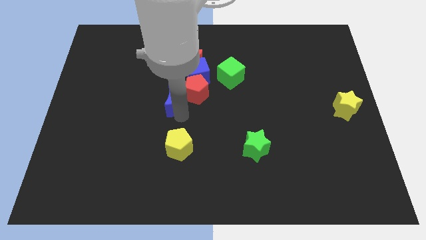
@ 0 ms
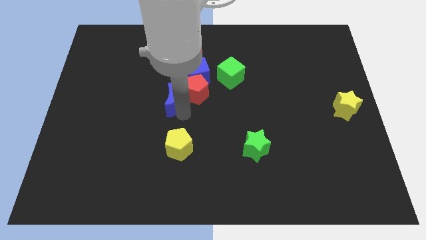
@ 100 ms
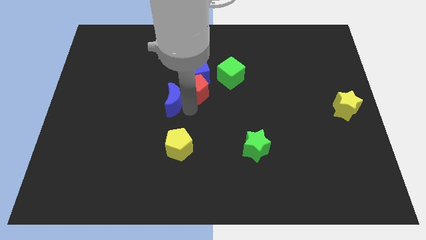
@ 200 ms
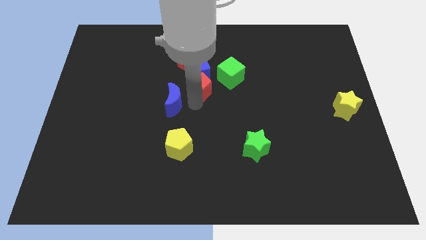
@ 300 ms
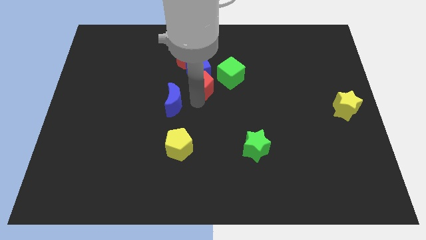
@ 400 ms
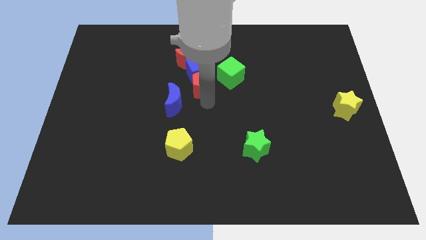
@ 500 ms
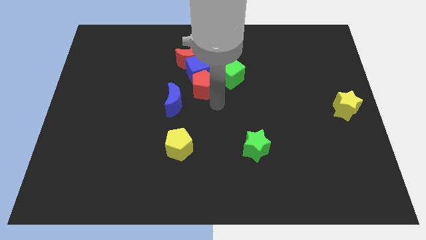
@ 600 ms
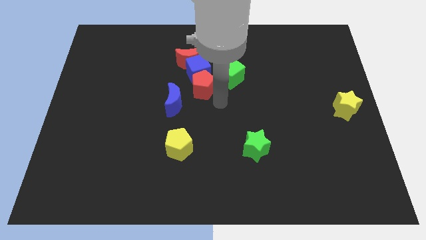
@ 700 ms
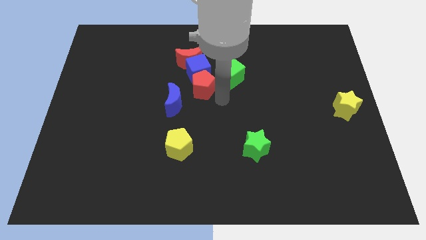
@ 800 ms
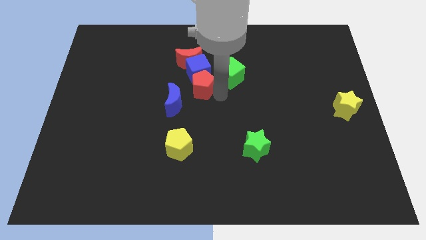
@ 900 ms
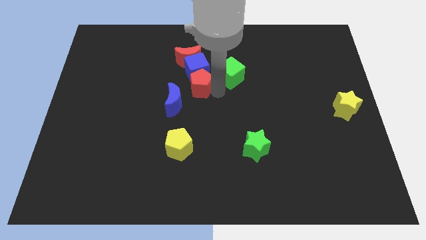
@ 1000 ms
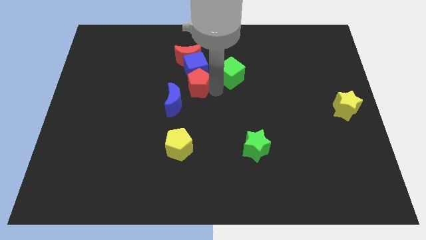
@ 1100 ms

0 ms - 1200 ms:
separate the blue crescent from the group of blocks

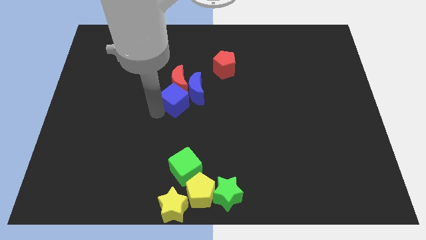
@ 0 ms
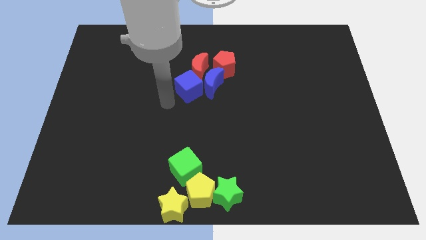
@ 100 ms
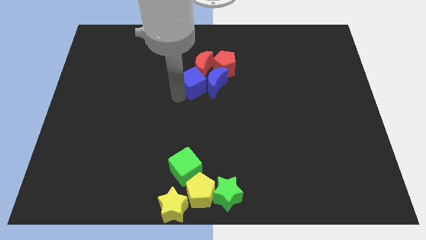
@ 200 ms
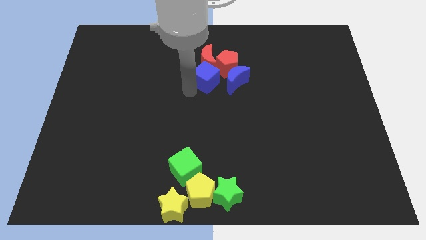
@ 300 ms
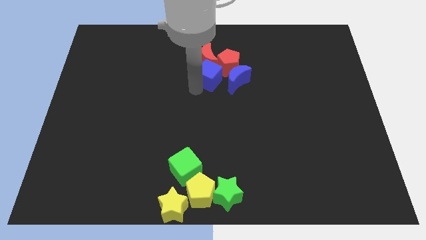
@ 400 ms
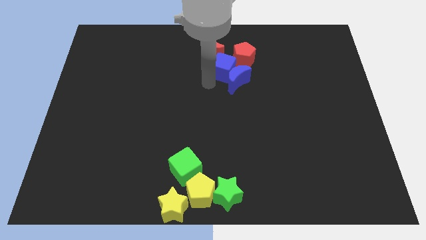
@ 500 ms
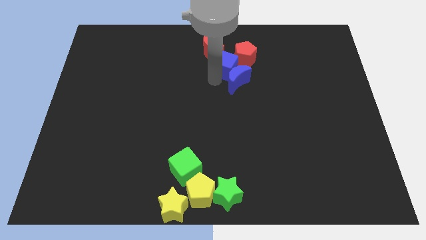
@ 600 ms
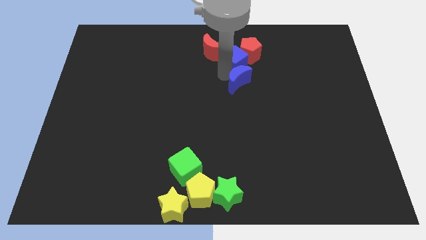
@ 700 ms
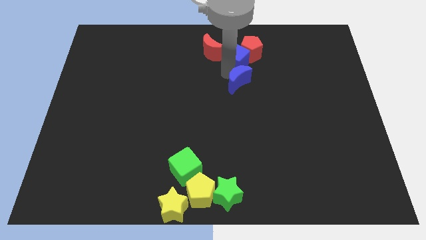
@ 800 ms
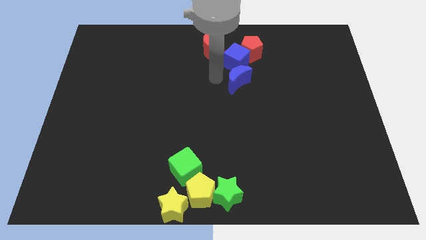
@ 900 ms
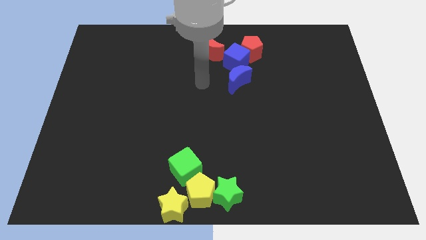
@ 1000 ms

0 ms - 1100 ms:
push blue cube into red pentagon

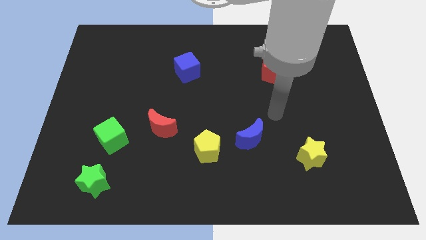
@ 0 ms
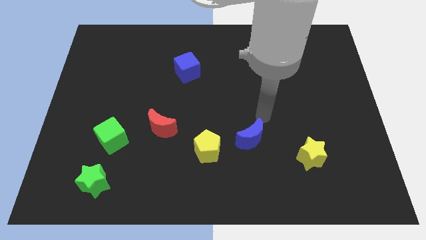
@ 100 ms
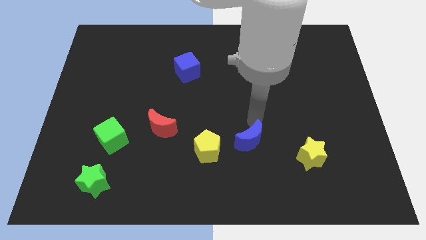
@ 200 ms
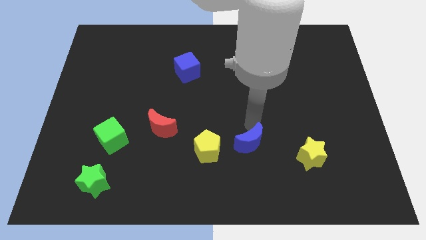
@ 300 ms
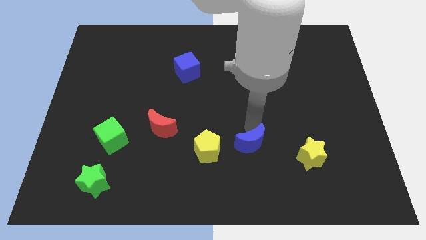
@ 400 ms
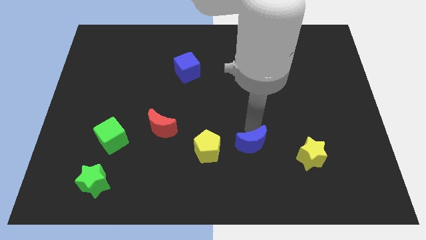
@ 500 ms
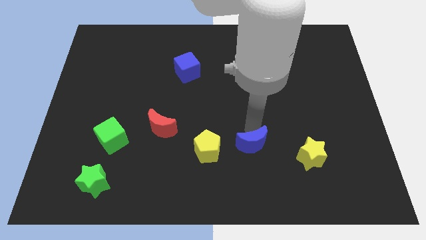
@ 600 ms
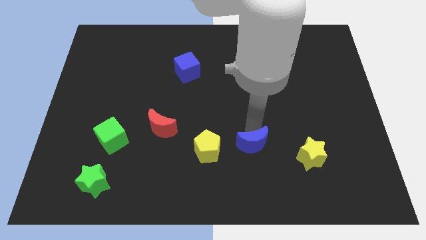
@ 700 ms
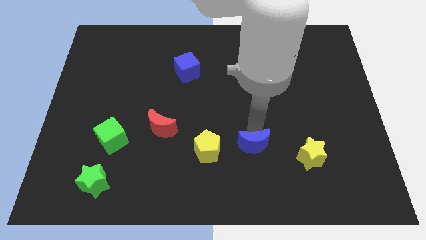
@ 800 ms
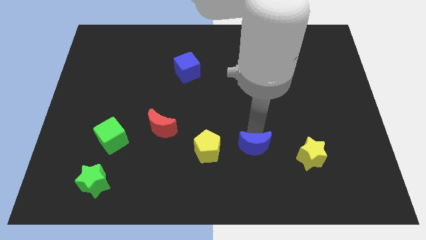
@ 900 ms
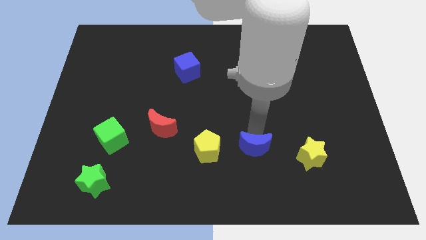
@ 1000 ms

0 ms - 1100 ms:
move blue moon between the two yellow blocks

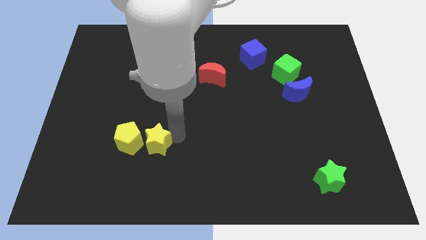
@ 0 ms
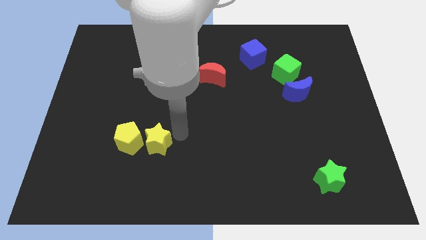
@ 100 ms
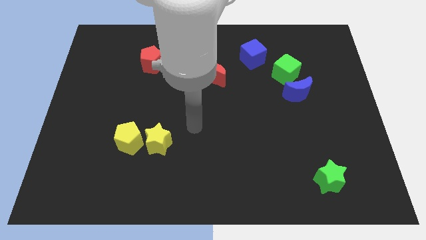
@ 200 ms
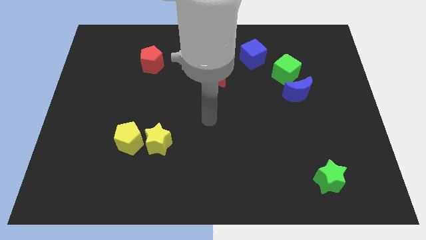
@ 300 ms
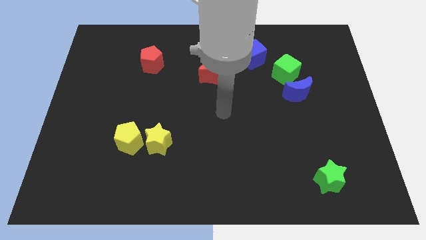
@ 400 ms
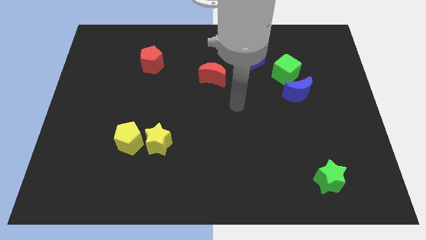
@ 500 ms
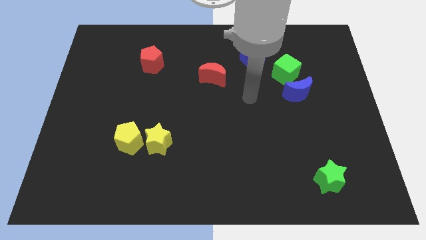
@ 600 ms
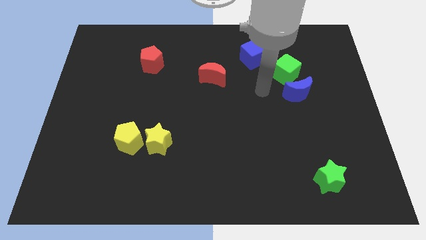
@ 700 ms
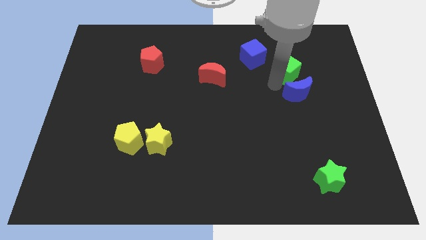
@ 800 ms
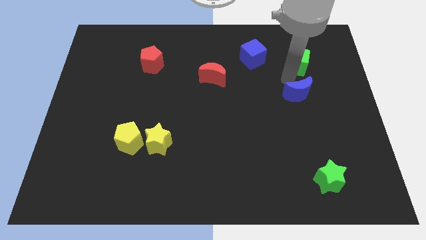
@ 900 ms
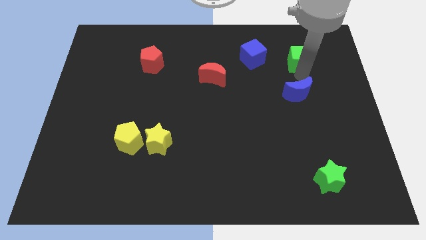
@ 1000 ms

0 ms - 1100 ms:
move the green cube to the top of the blue crescent

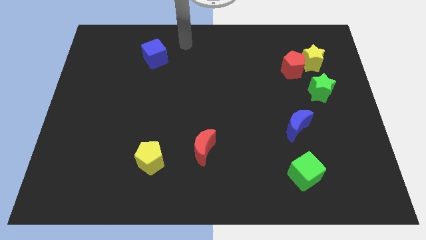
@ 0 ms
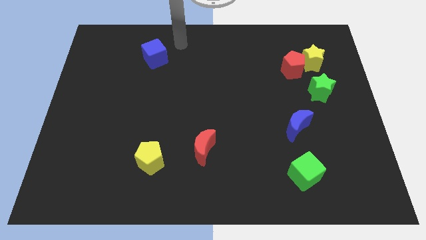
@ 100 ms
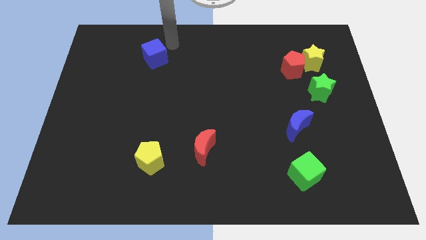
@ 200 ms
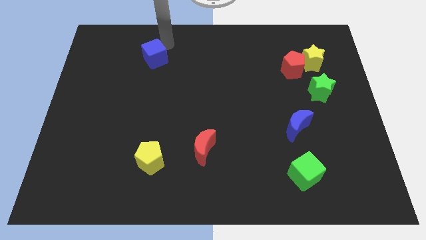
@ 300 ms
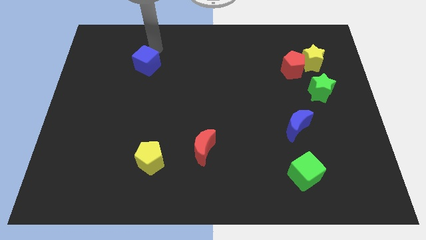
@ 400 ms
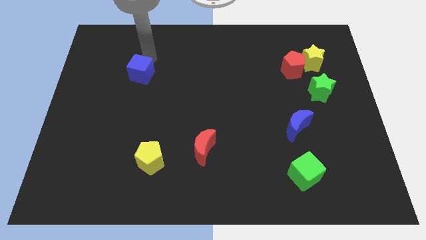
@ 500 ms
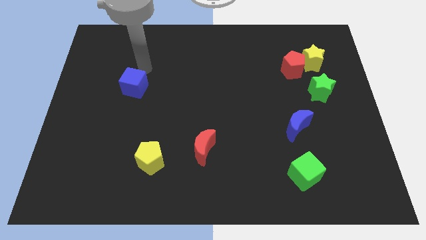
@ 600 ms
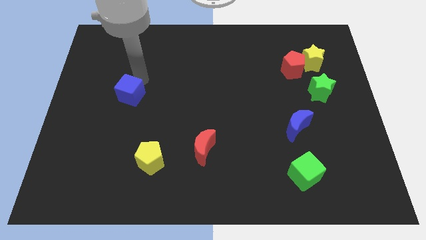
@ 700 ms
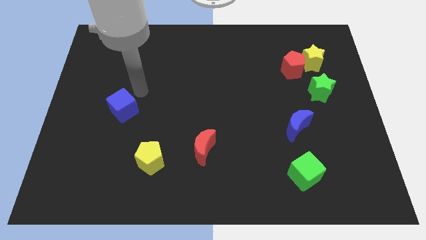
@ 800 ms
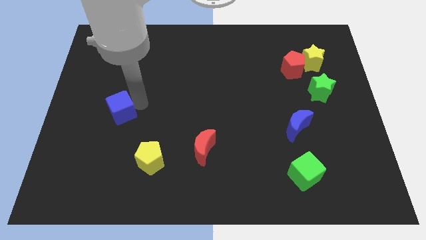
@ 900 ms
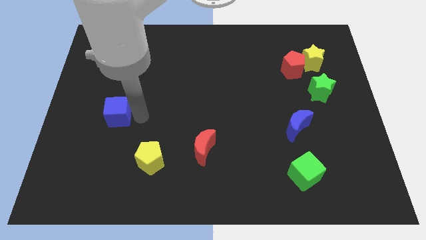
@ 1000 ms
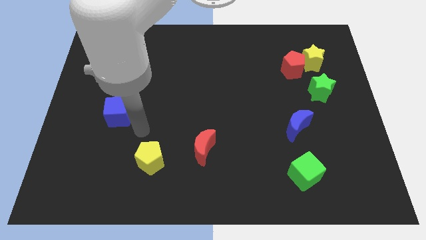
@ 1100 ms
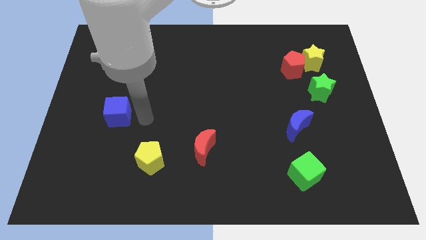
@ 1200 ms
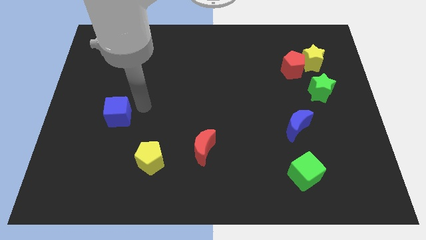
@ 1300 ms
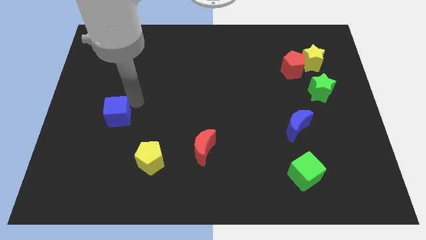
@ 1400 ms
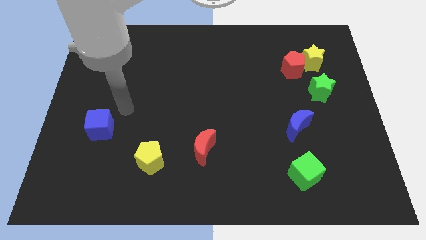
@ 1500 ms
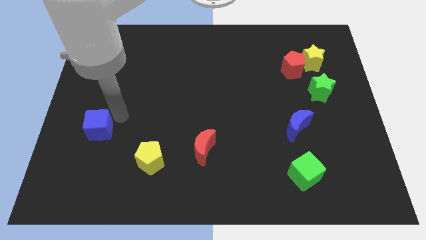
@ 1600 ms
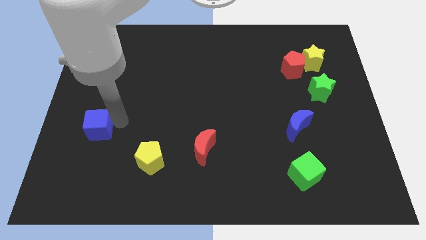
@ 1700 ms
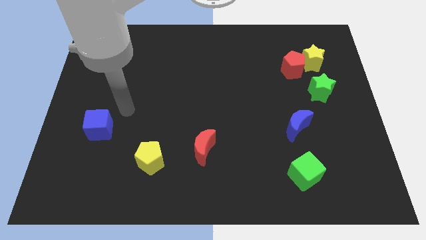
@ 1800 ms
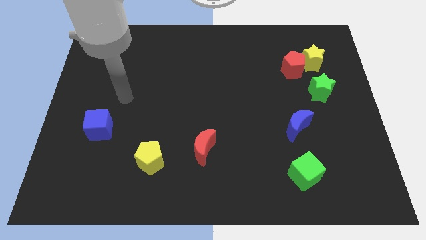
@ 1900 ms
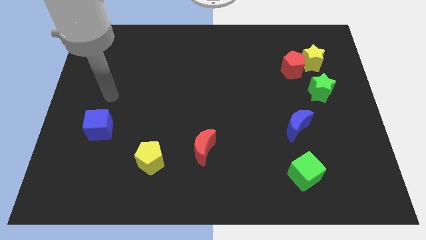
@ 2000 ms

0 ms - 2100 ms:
push blue cube towards center left

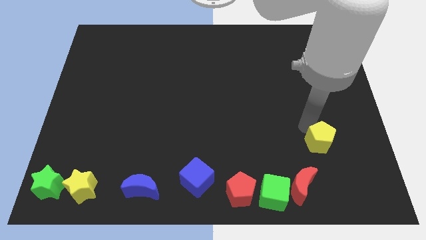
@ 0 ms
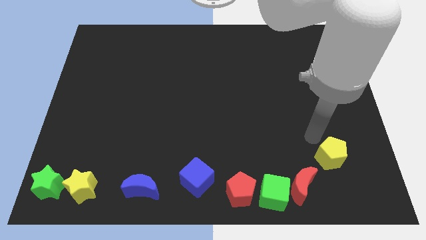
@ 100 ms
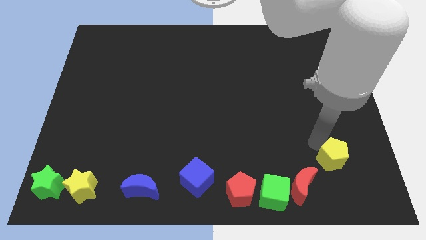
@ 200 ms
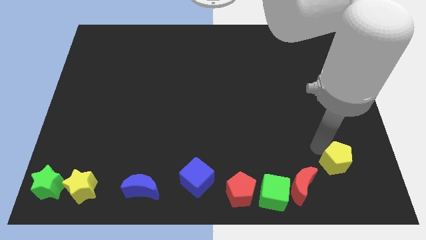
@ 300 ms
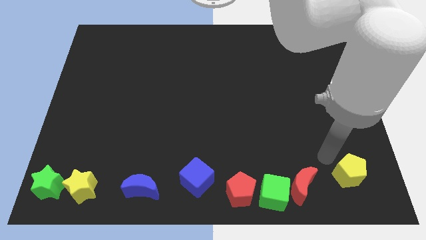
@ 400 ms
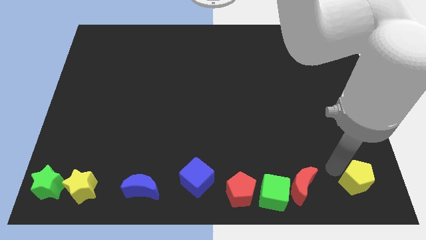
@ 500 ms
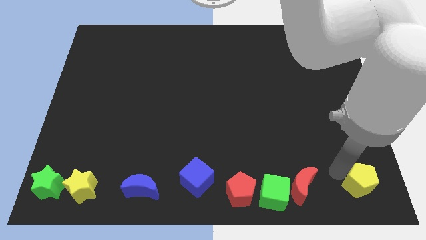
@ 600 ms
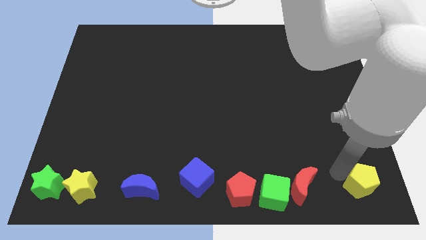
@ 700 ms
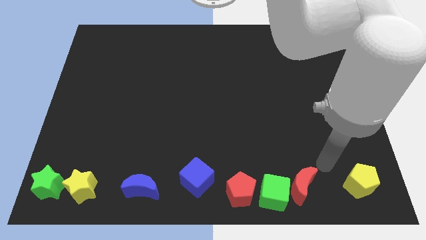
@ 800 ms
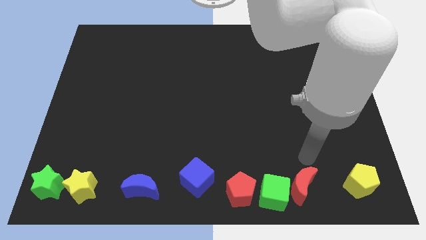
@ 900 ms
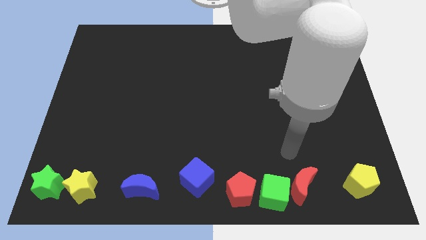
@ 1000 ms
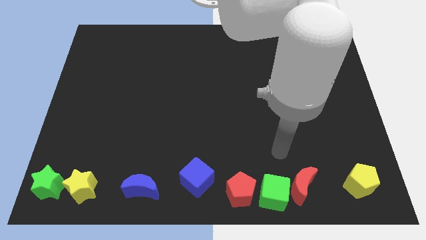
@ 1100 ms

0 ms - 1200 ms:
put the yellow pentagon to the right of the yellow pentagon

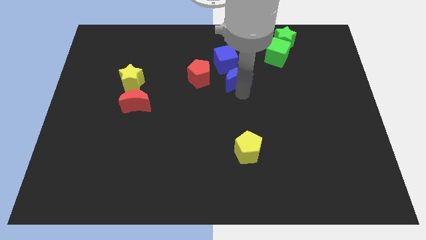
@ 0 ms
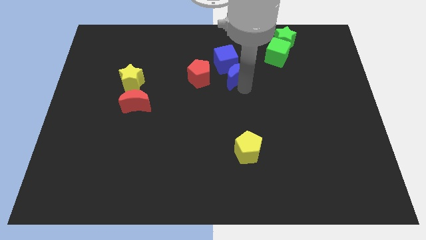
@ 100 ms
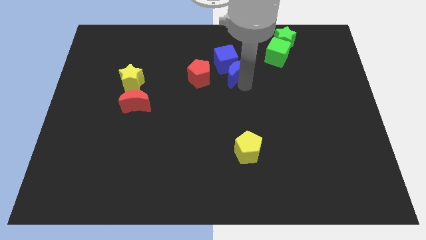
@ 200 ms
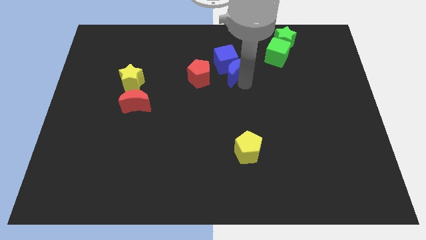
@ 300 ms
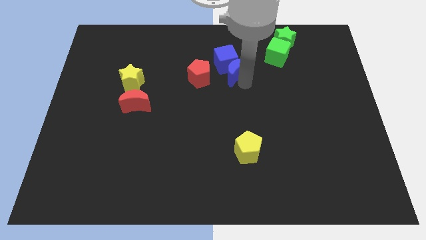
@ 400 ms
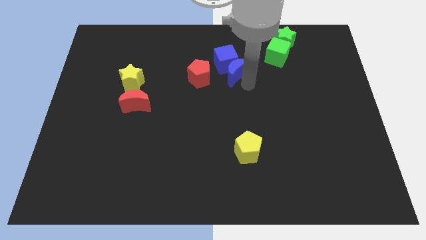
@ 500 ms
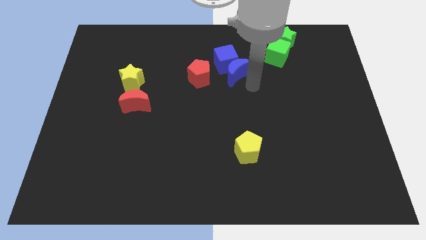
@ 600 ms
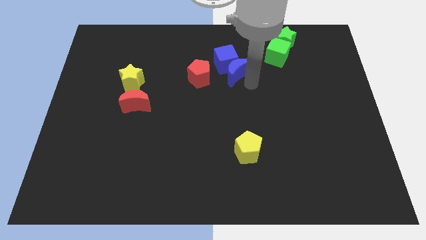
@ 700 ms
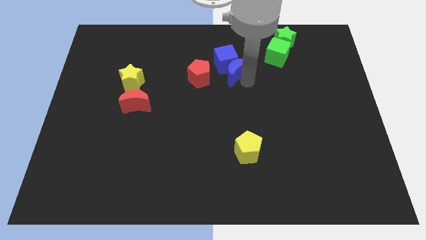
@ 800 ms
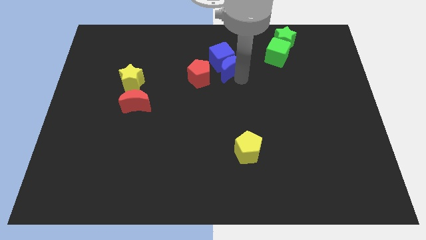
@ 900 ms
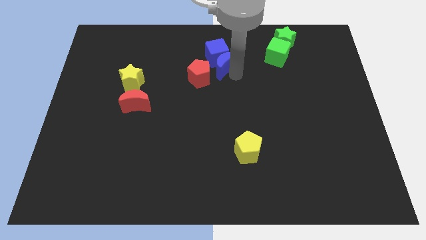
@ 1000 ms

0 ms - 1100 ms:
push the blue moon into the blue cube
